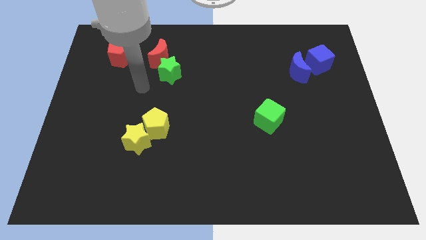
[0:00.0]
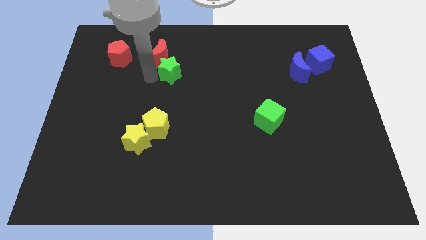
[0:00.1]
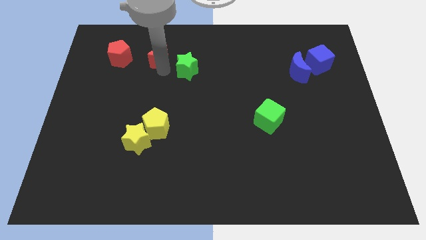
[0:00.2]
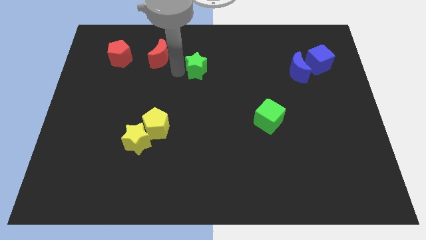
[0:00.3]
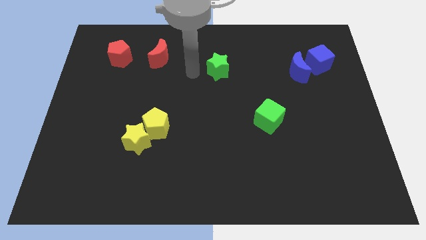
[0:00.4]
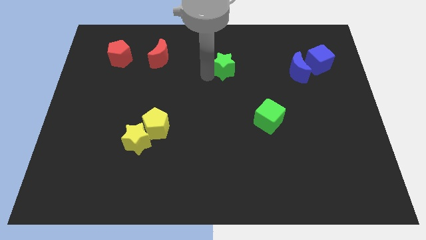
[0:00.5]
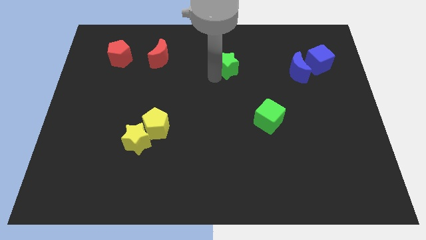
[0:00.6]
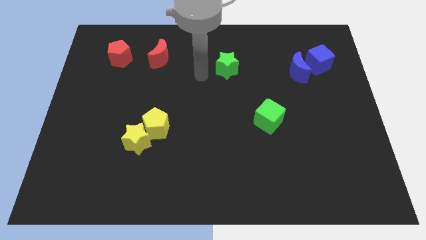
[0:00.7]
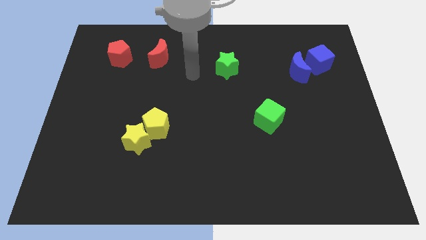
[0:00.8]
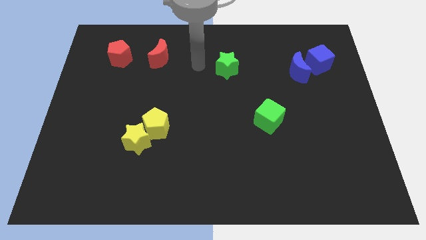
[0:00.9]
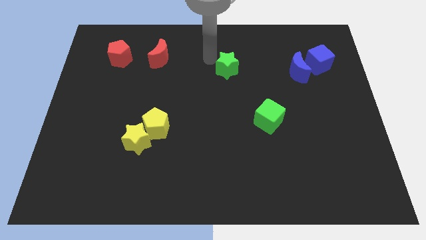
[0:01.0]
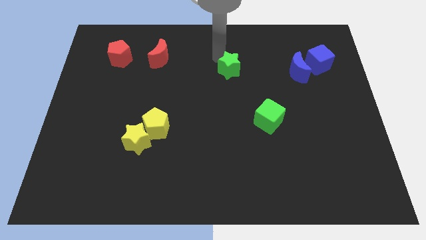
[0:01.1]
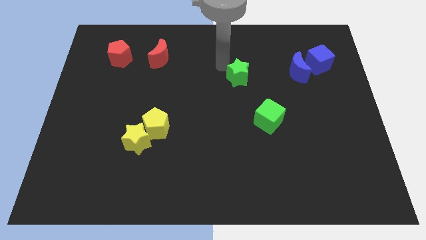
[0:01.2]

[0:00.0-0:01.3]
move the green star from the bottom side of the red crescent

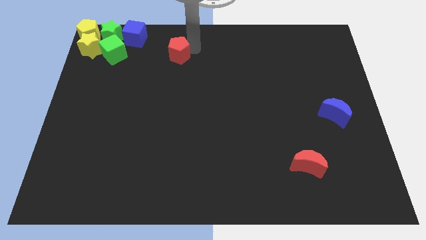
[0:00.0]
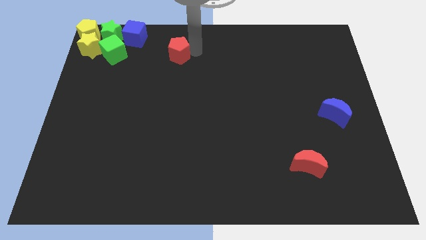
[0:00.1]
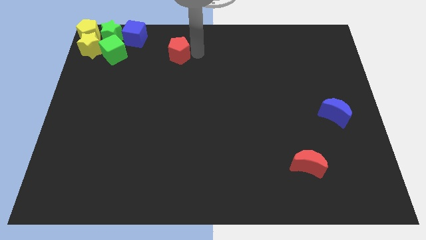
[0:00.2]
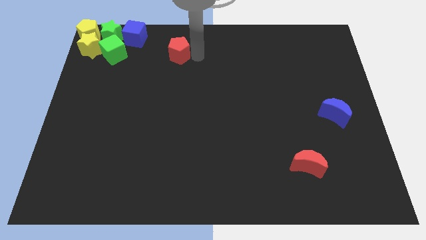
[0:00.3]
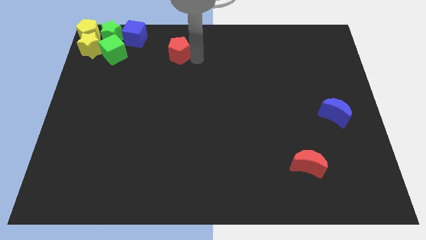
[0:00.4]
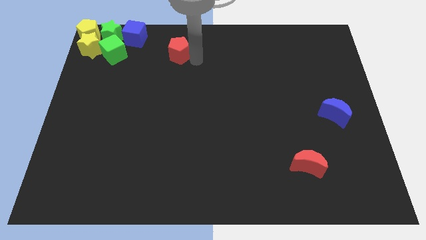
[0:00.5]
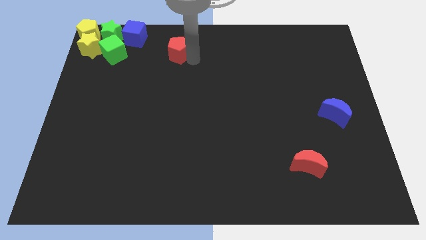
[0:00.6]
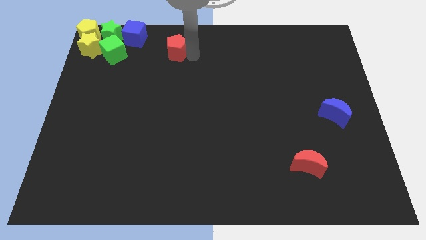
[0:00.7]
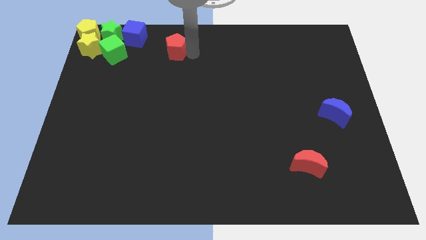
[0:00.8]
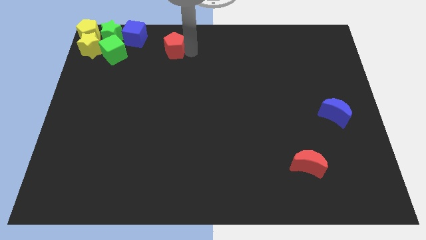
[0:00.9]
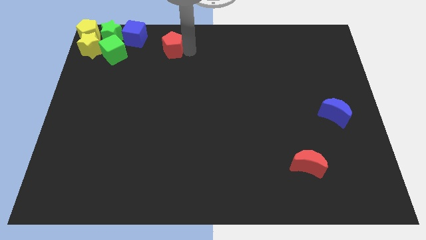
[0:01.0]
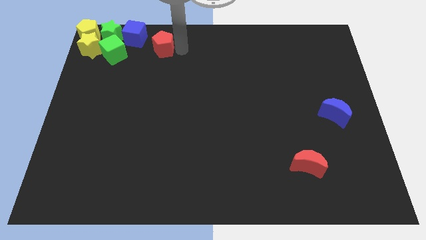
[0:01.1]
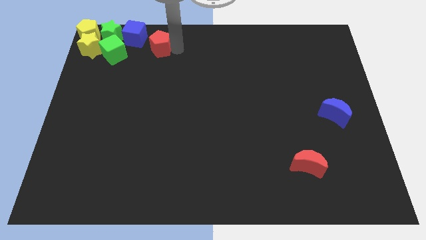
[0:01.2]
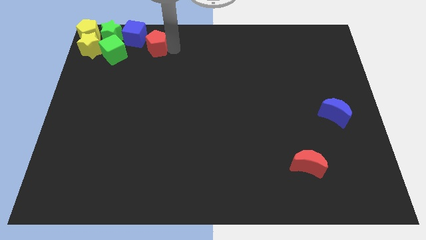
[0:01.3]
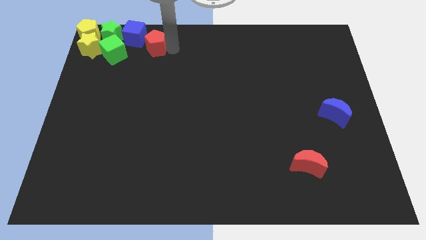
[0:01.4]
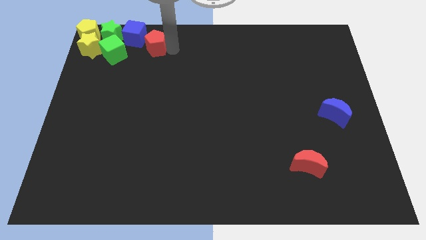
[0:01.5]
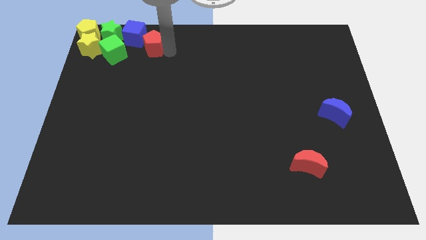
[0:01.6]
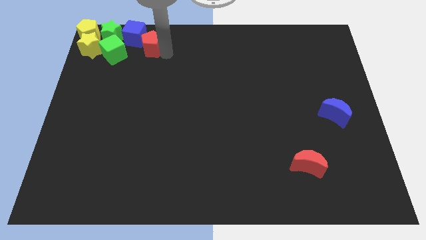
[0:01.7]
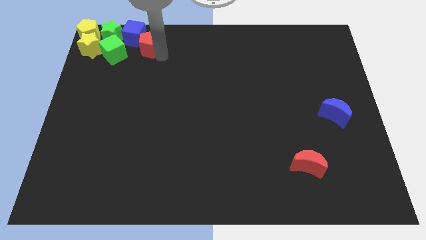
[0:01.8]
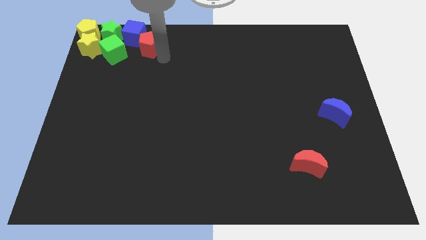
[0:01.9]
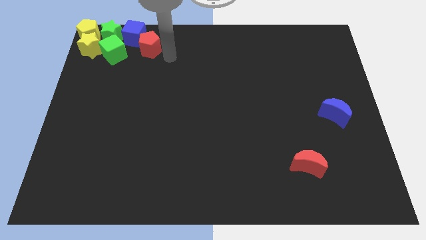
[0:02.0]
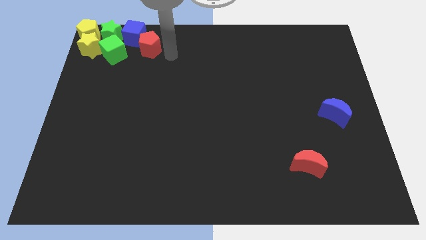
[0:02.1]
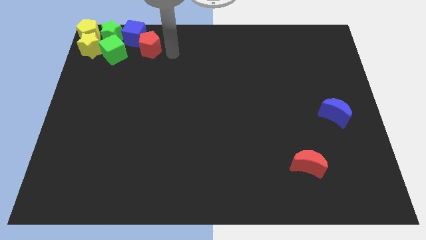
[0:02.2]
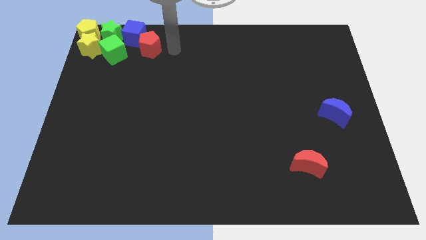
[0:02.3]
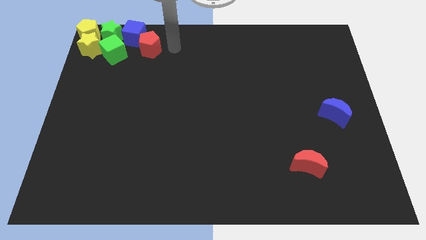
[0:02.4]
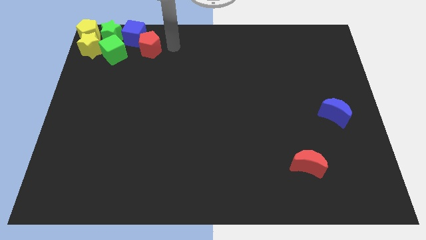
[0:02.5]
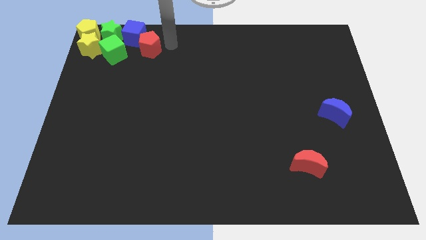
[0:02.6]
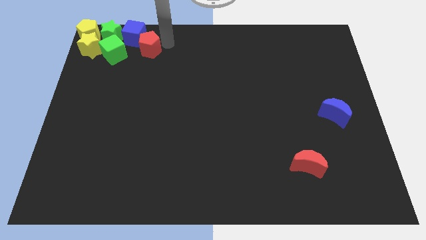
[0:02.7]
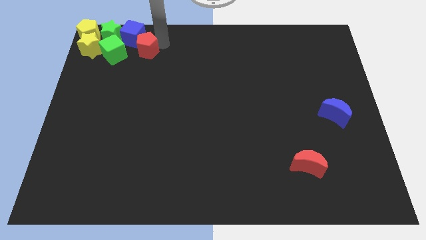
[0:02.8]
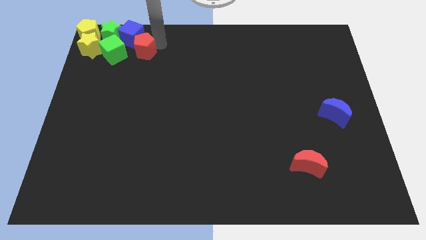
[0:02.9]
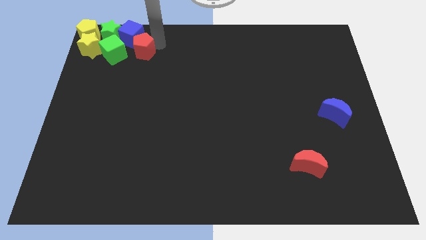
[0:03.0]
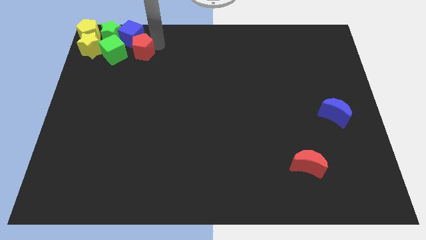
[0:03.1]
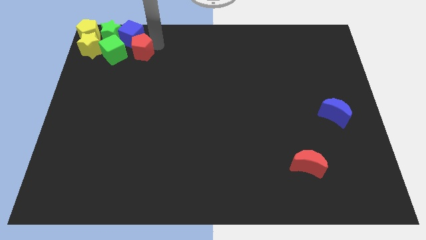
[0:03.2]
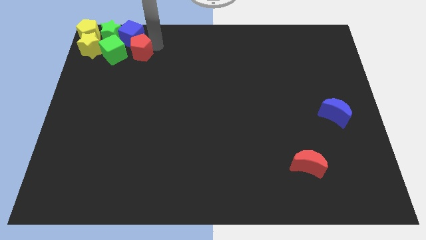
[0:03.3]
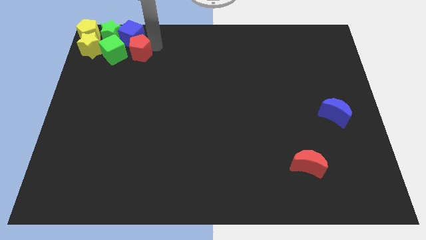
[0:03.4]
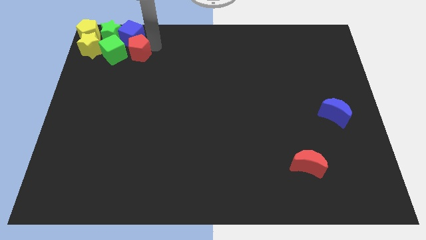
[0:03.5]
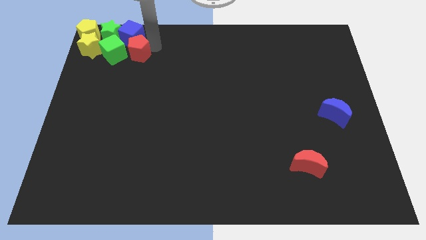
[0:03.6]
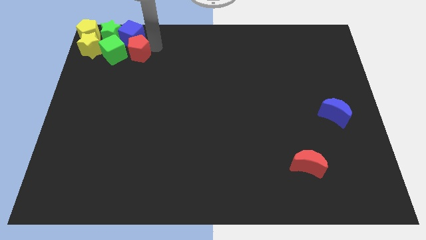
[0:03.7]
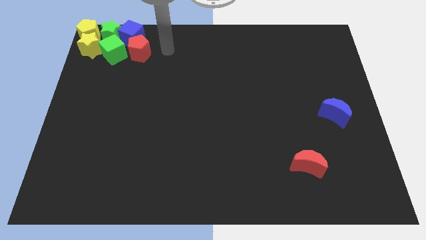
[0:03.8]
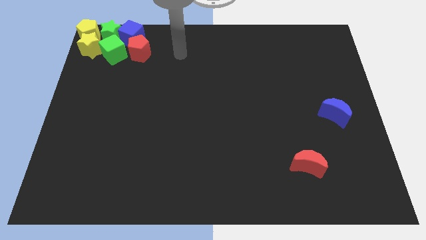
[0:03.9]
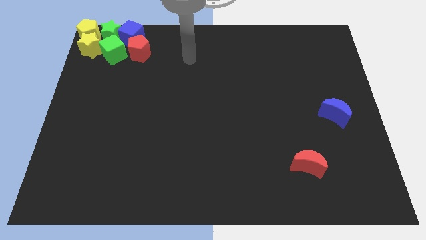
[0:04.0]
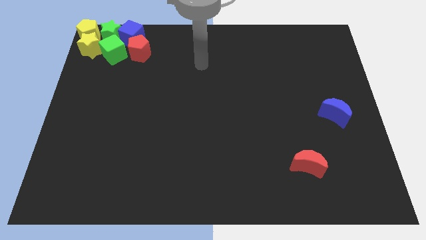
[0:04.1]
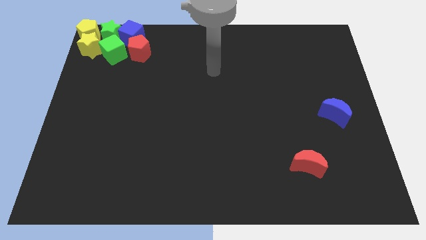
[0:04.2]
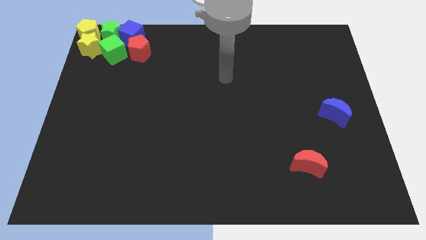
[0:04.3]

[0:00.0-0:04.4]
push the red pentagon into the blue cube

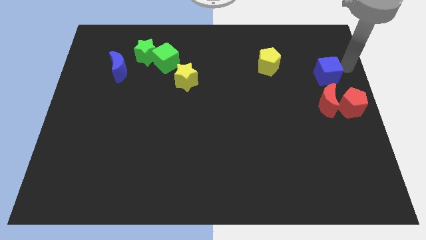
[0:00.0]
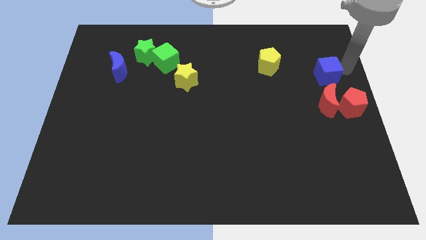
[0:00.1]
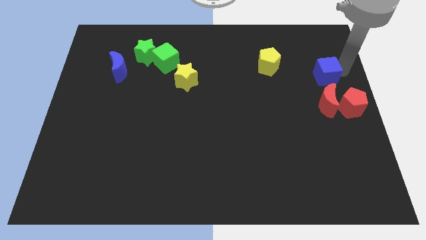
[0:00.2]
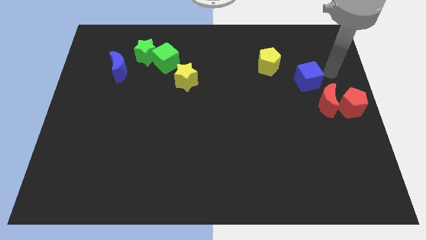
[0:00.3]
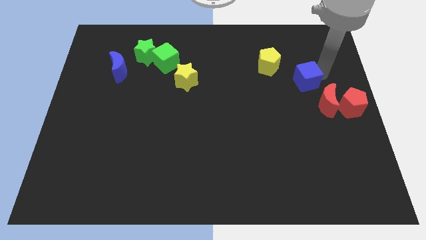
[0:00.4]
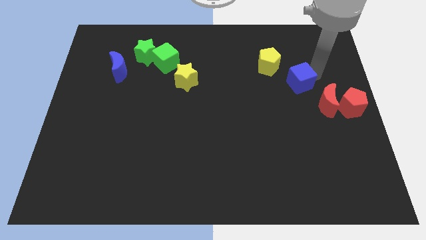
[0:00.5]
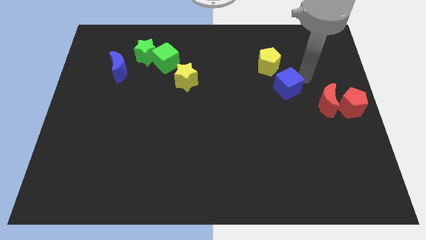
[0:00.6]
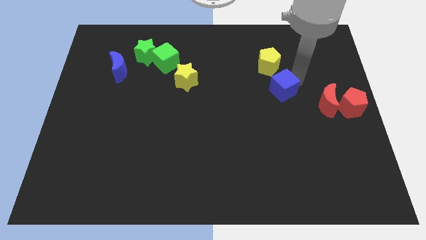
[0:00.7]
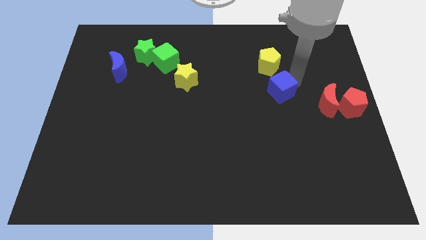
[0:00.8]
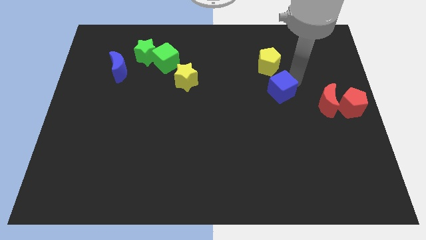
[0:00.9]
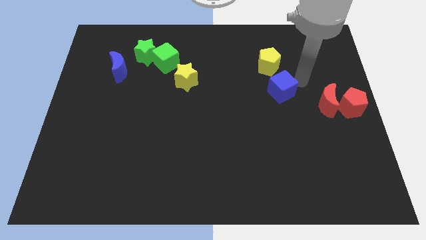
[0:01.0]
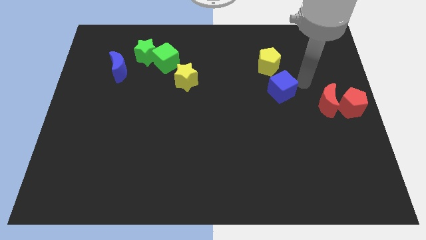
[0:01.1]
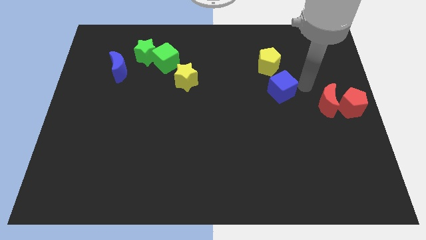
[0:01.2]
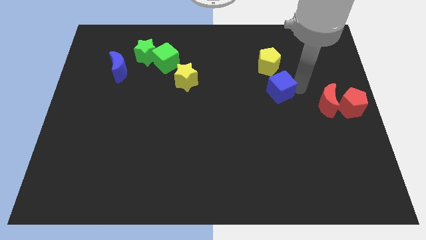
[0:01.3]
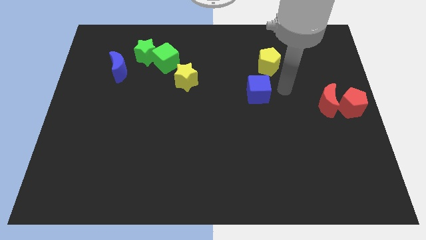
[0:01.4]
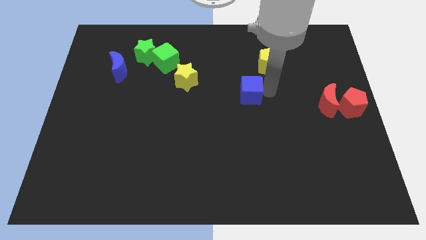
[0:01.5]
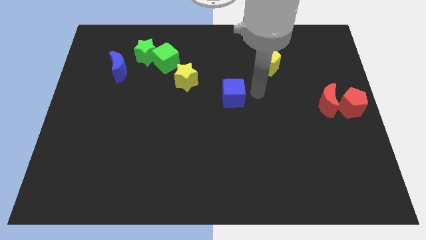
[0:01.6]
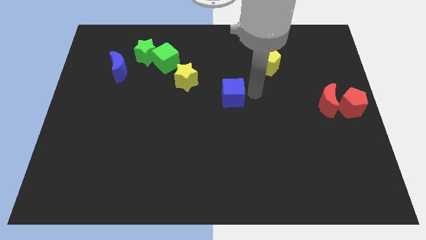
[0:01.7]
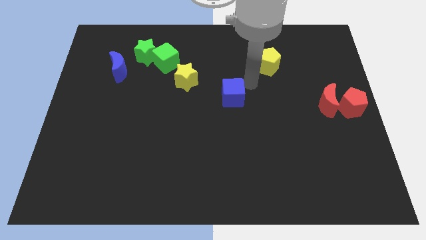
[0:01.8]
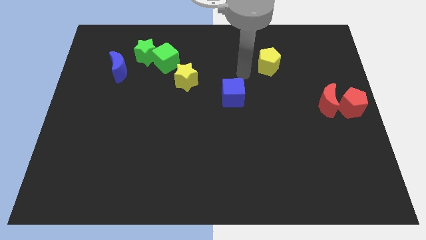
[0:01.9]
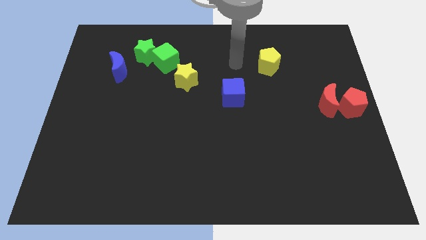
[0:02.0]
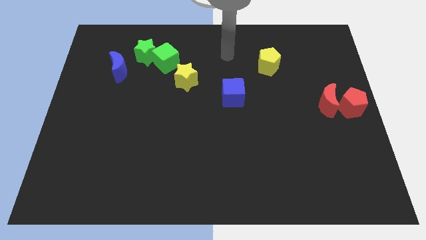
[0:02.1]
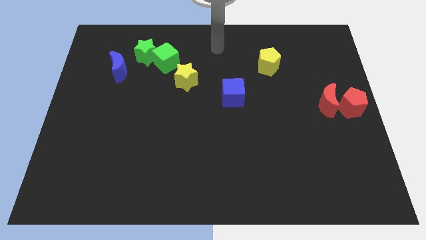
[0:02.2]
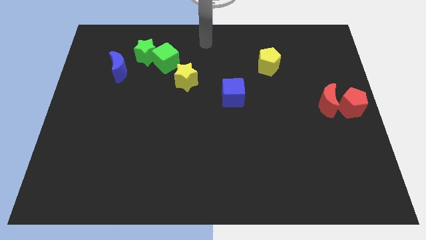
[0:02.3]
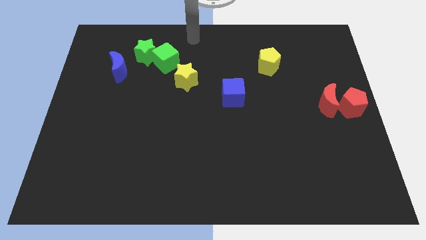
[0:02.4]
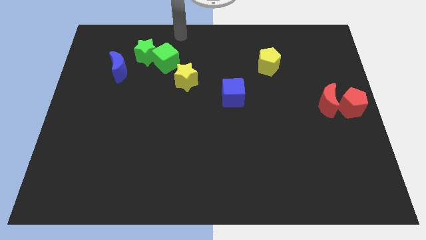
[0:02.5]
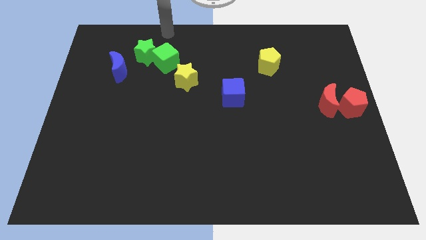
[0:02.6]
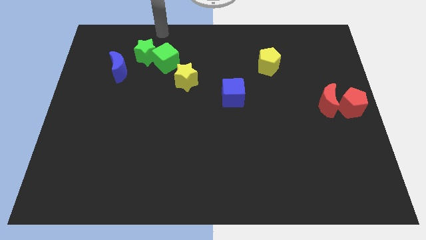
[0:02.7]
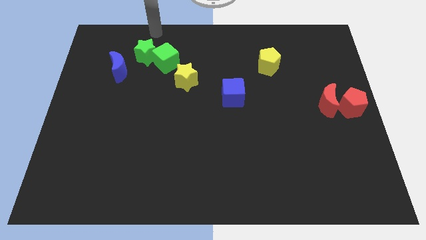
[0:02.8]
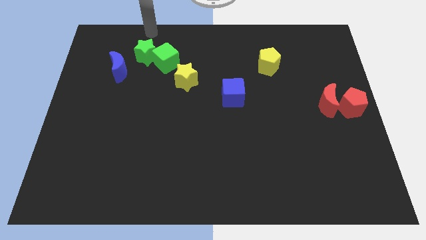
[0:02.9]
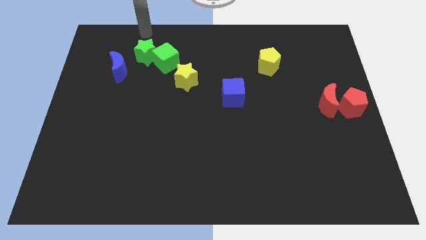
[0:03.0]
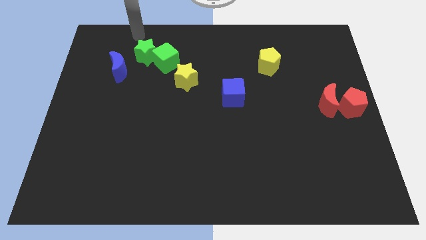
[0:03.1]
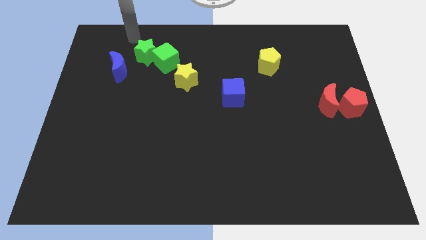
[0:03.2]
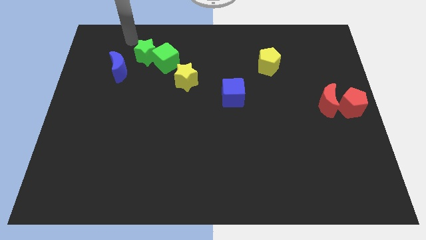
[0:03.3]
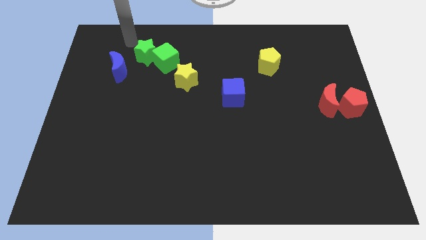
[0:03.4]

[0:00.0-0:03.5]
place the arm near the green star
